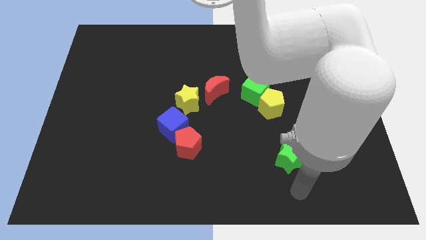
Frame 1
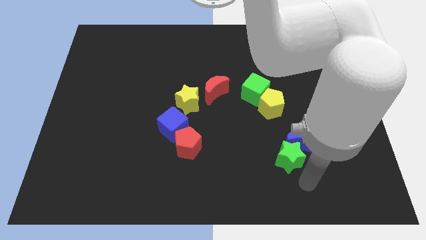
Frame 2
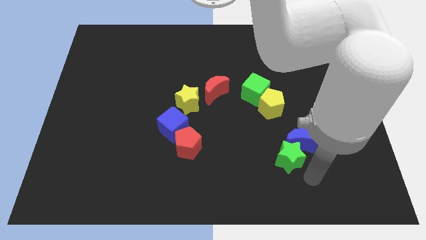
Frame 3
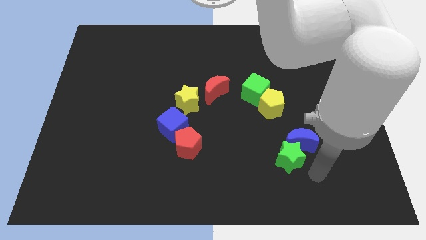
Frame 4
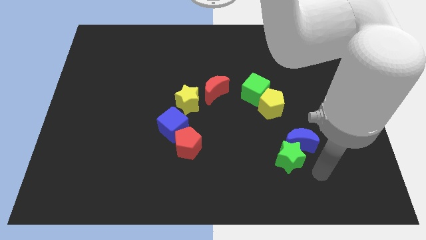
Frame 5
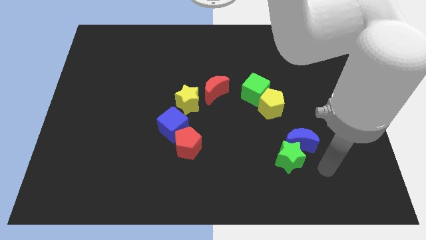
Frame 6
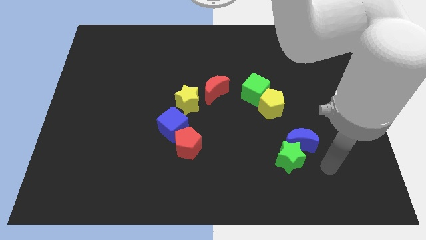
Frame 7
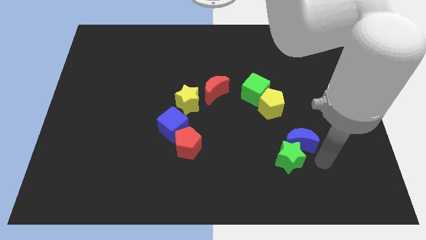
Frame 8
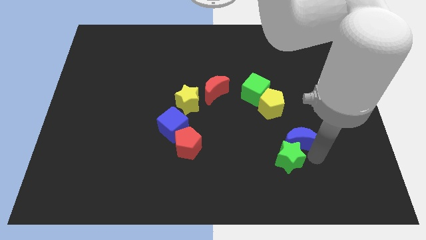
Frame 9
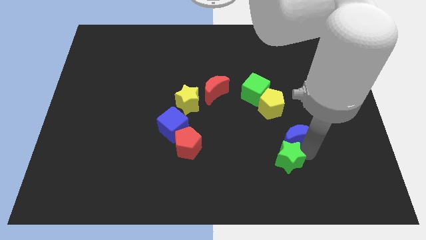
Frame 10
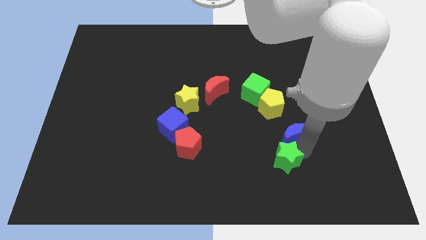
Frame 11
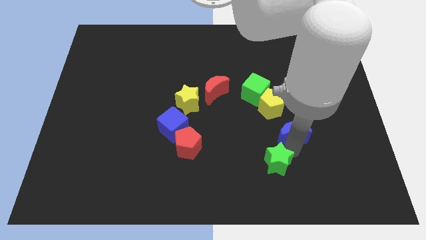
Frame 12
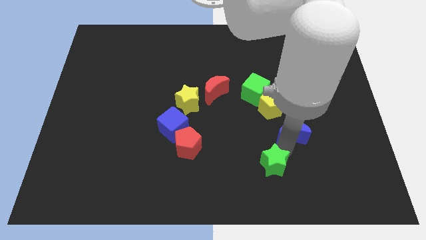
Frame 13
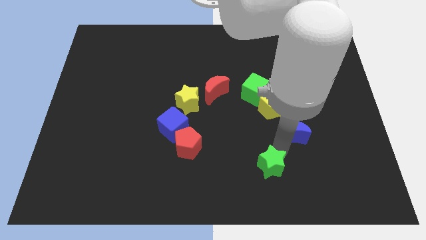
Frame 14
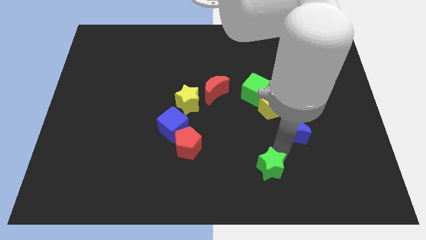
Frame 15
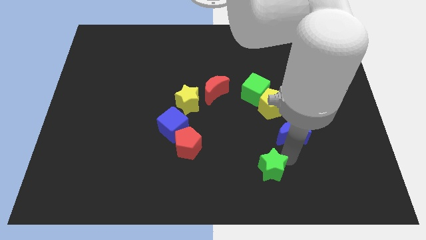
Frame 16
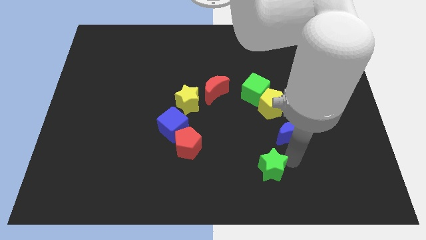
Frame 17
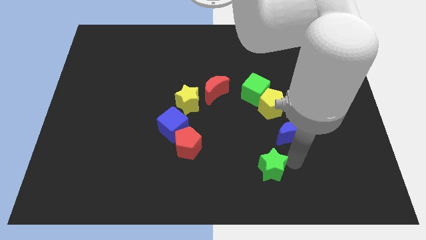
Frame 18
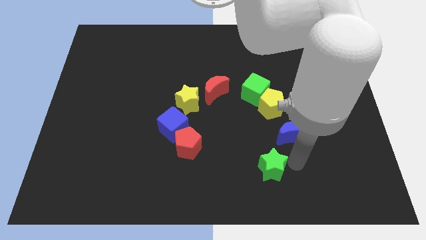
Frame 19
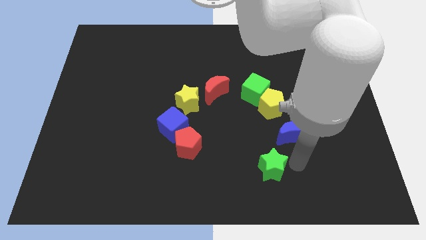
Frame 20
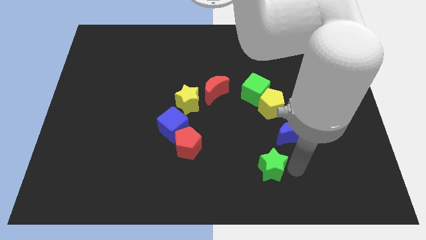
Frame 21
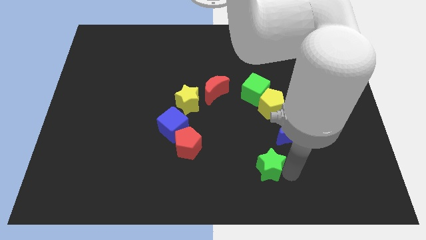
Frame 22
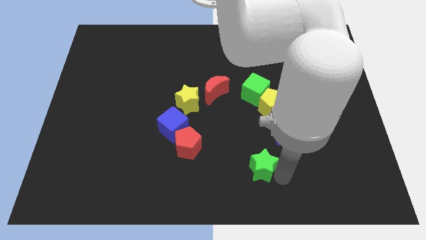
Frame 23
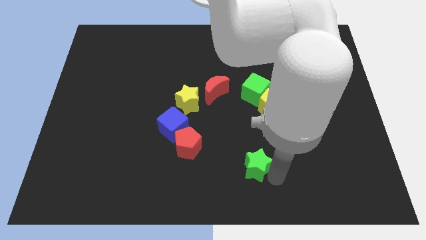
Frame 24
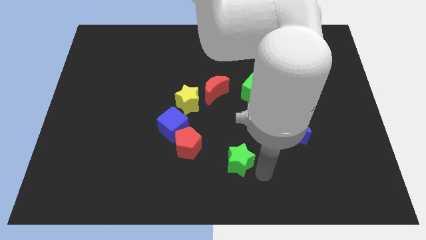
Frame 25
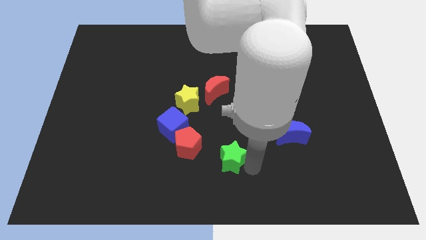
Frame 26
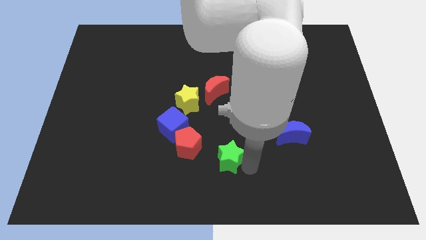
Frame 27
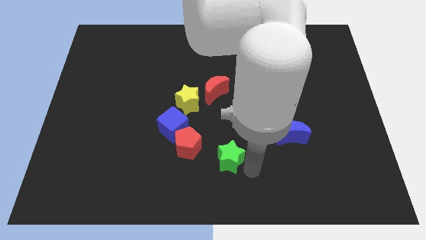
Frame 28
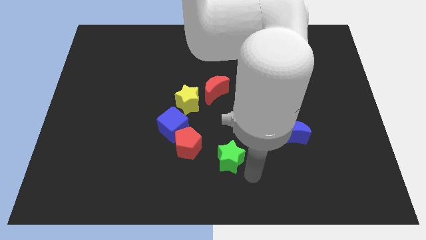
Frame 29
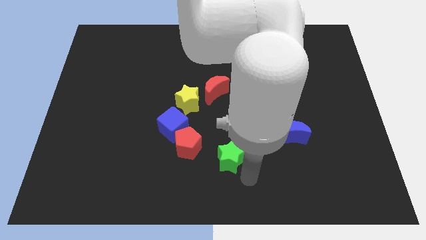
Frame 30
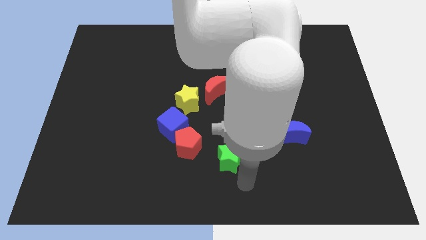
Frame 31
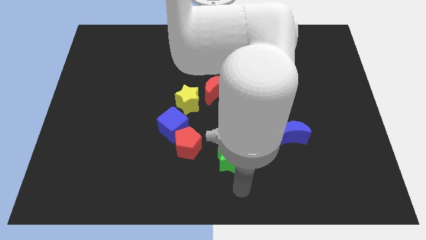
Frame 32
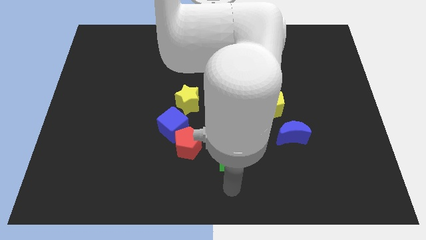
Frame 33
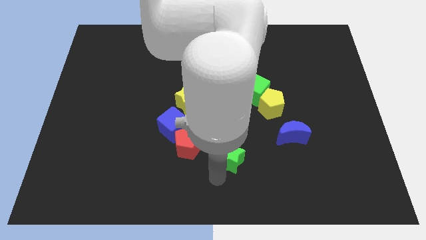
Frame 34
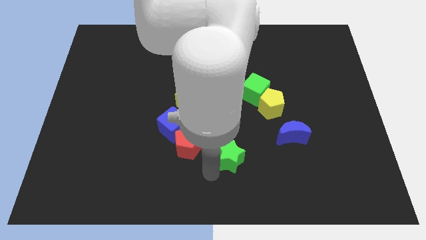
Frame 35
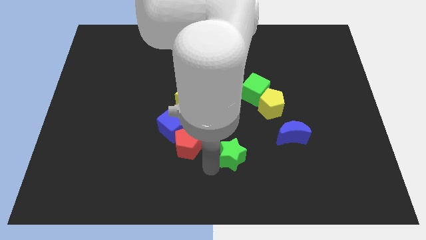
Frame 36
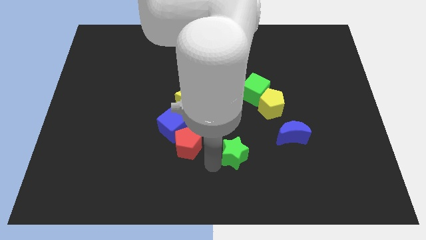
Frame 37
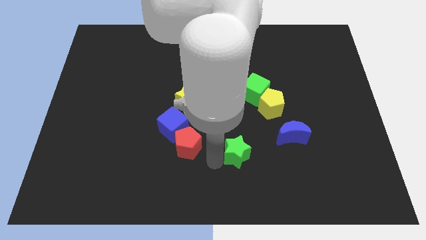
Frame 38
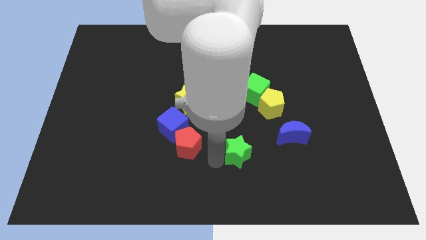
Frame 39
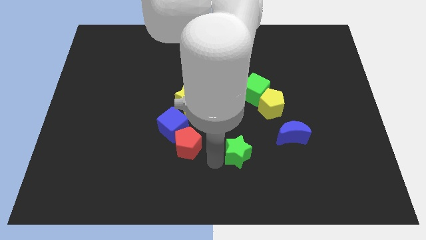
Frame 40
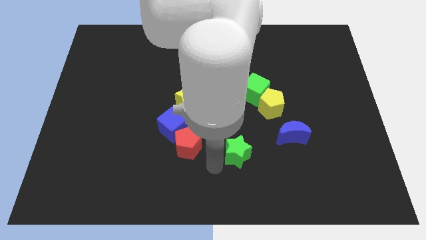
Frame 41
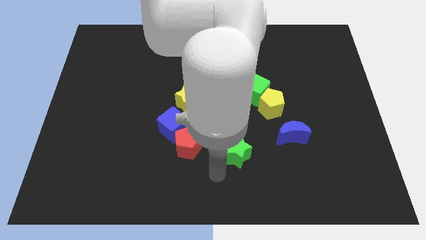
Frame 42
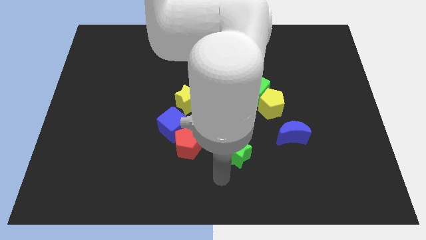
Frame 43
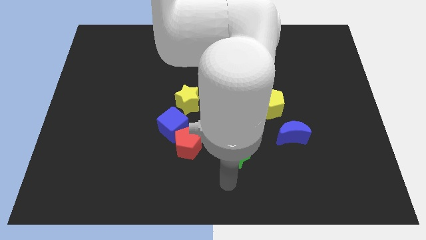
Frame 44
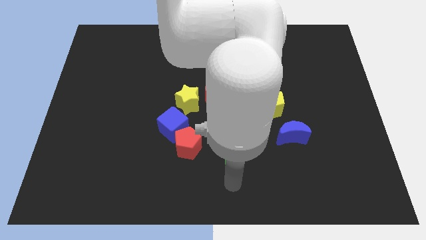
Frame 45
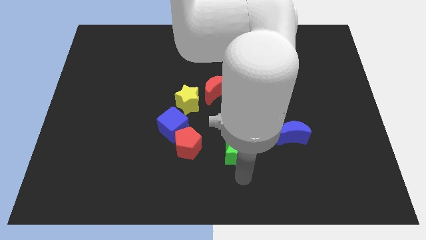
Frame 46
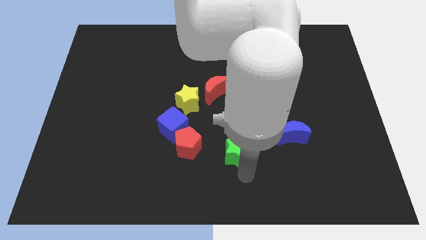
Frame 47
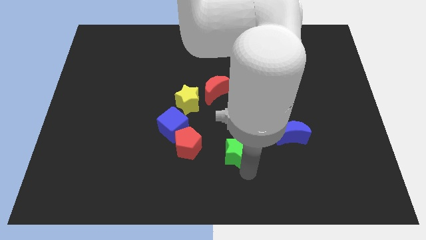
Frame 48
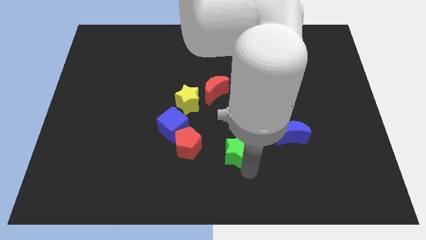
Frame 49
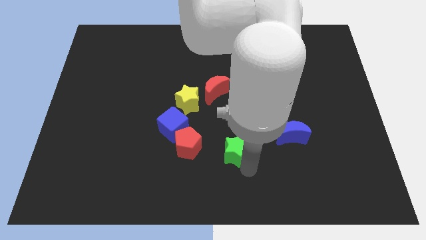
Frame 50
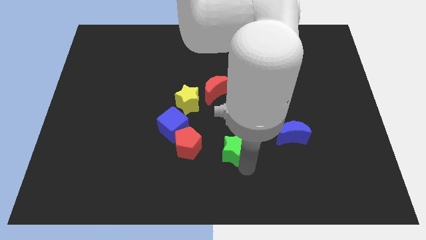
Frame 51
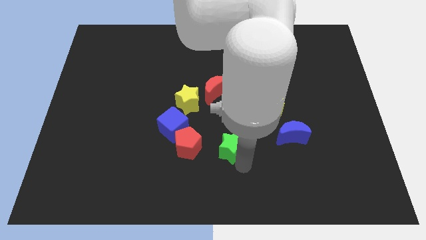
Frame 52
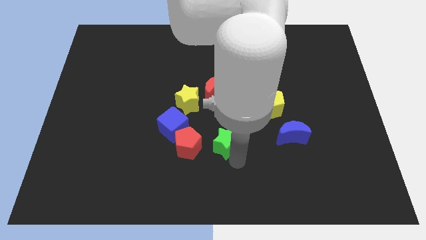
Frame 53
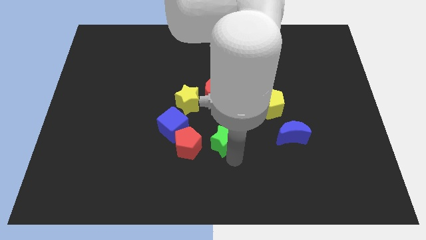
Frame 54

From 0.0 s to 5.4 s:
place green star to the right side of the red pentagon

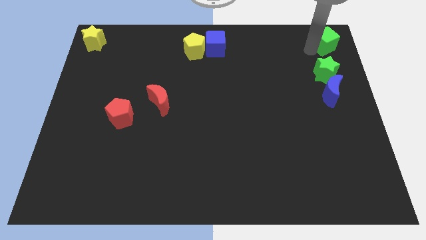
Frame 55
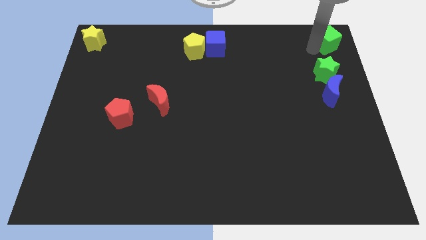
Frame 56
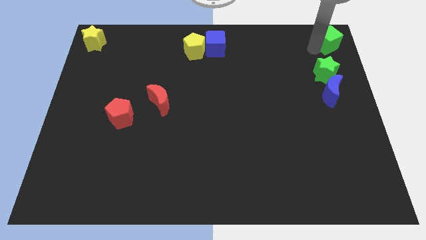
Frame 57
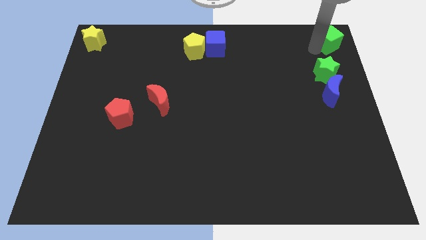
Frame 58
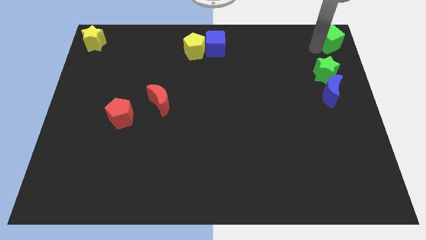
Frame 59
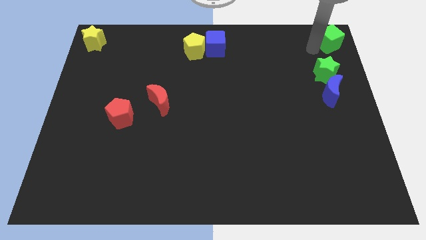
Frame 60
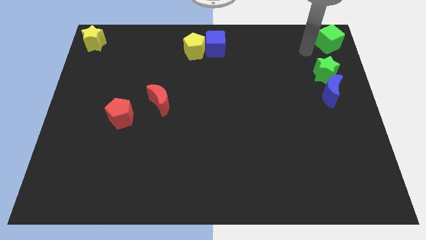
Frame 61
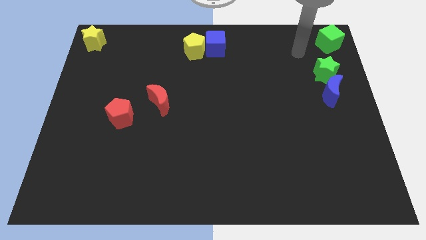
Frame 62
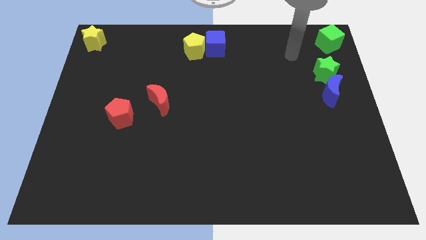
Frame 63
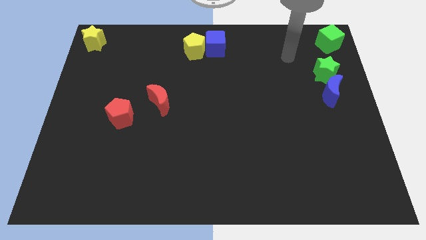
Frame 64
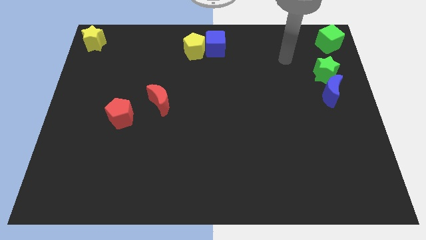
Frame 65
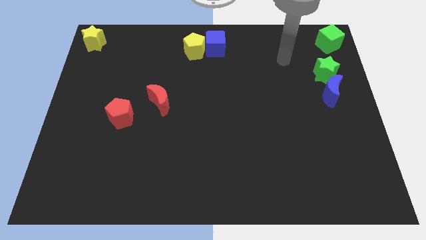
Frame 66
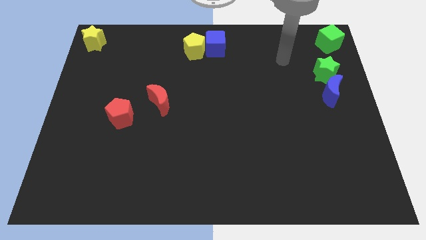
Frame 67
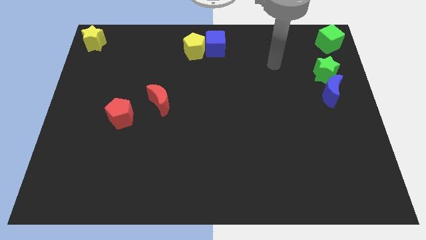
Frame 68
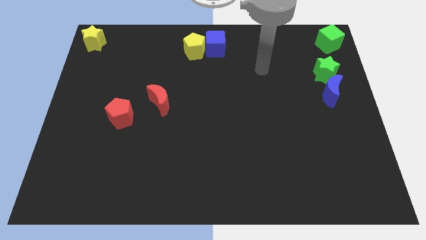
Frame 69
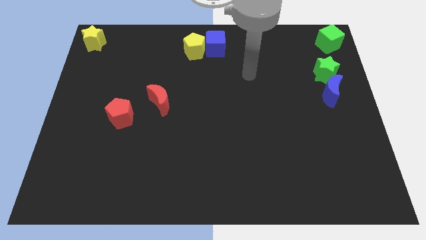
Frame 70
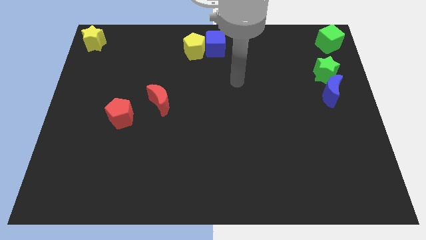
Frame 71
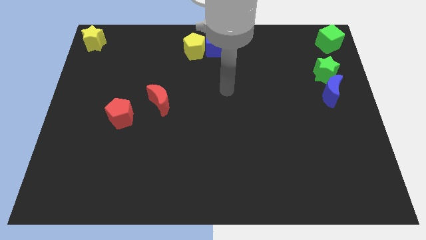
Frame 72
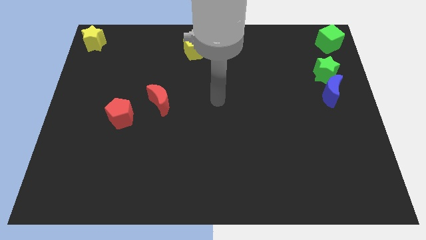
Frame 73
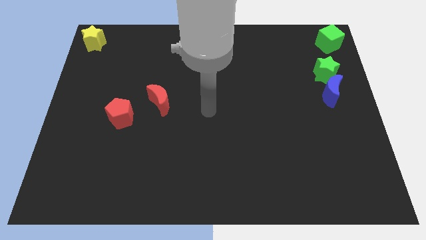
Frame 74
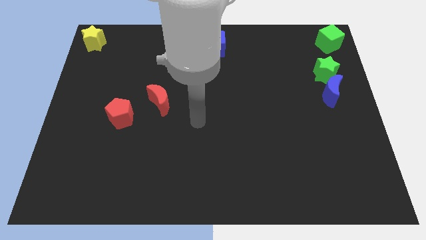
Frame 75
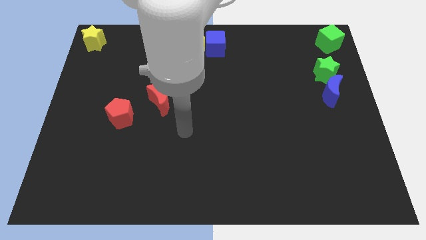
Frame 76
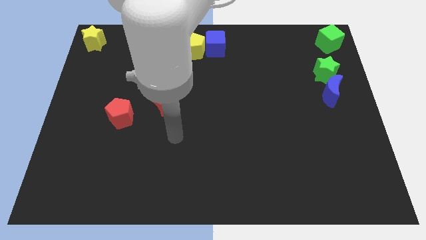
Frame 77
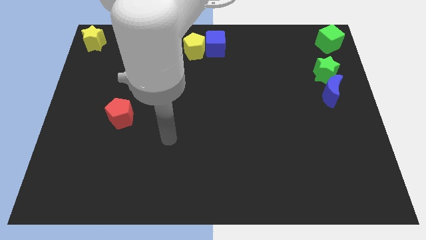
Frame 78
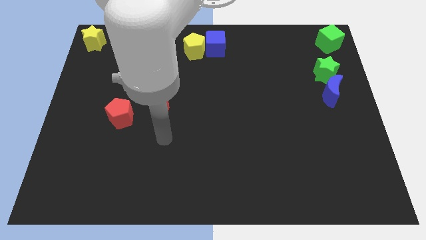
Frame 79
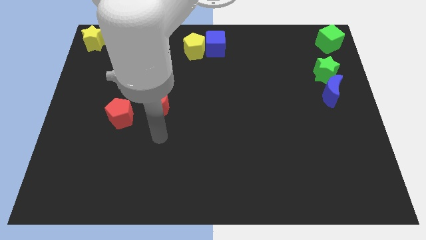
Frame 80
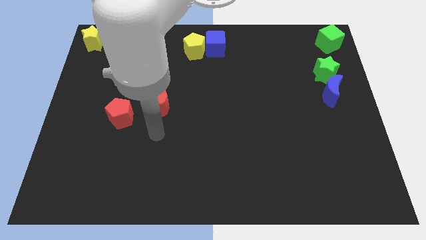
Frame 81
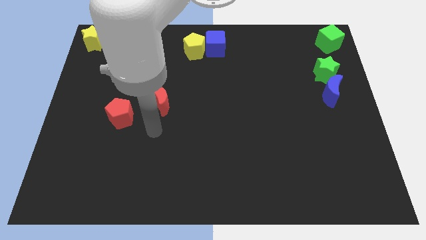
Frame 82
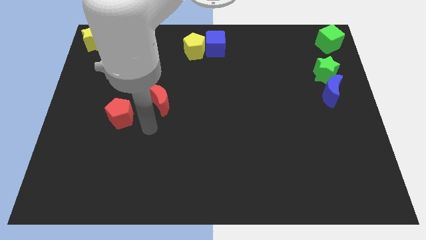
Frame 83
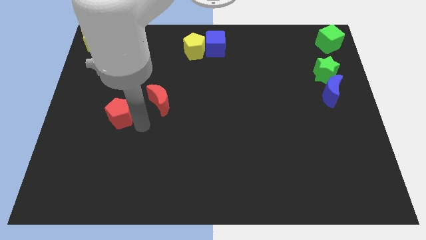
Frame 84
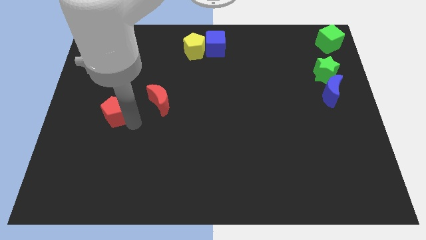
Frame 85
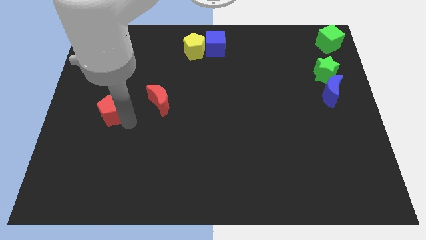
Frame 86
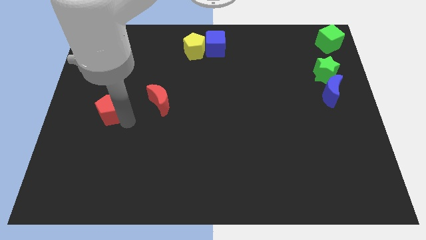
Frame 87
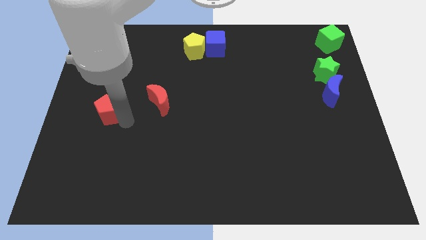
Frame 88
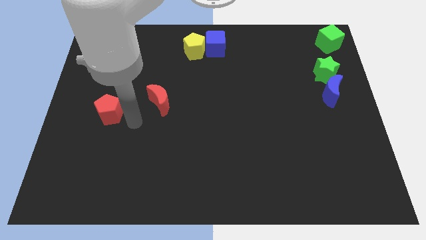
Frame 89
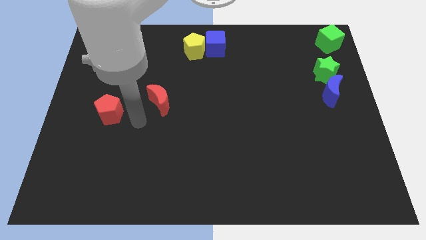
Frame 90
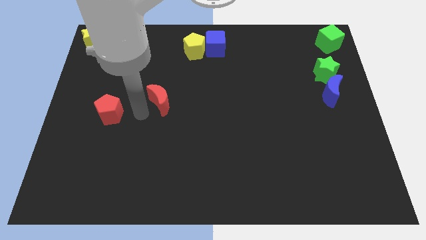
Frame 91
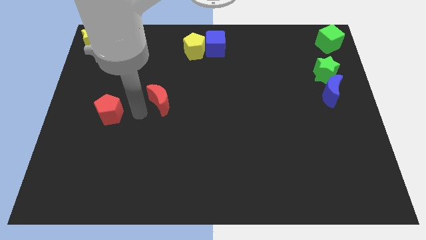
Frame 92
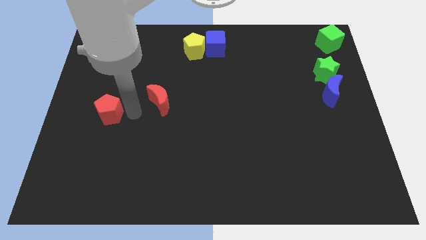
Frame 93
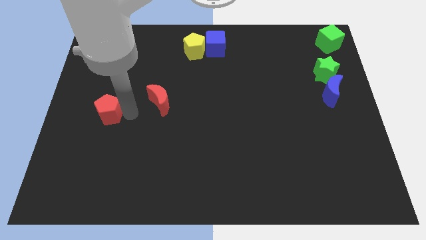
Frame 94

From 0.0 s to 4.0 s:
move arm near red pentagon
